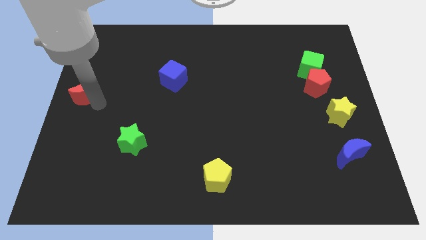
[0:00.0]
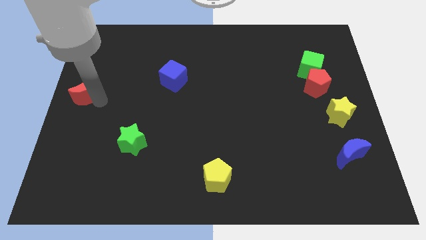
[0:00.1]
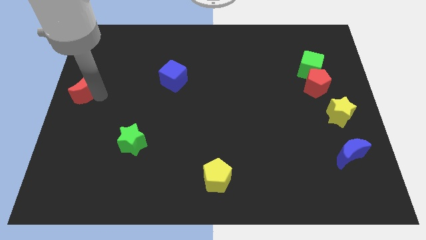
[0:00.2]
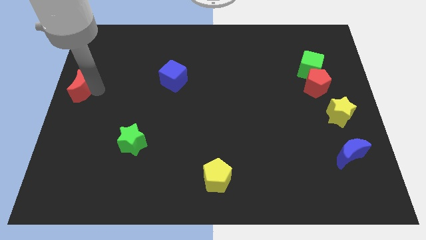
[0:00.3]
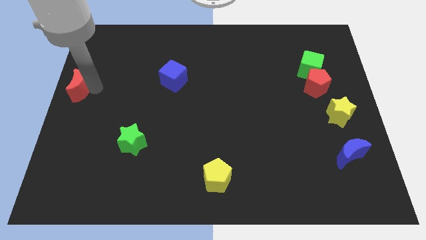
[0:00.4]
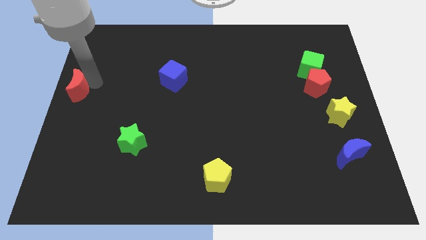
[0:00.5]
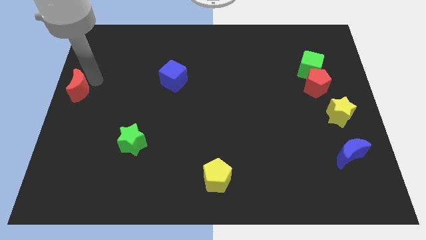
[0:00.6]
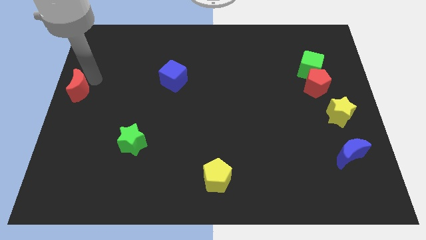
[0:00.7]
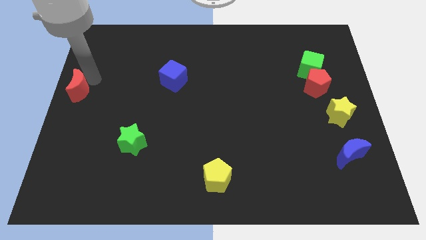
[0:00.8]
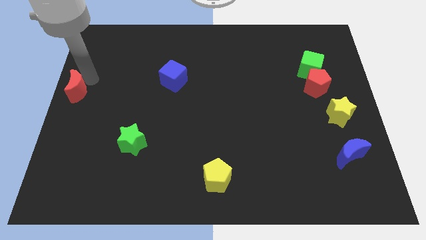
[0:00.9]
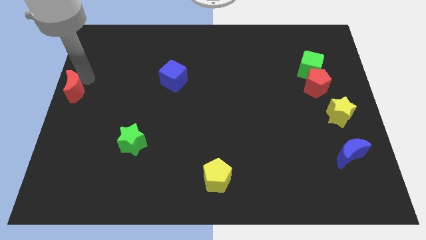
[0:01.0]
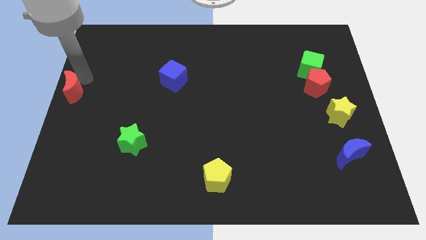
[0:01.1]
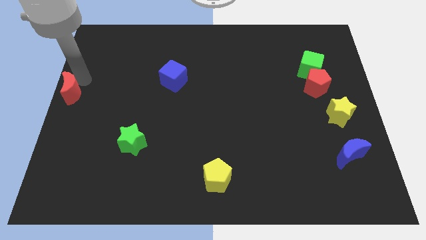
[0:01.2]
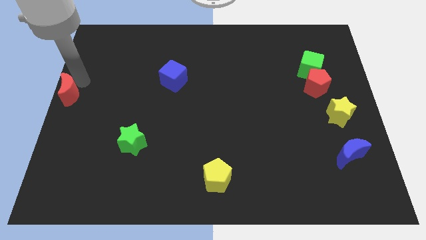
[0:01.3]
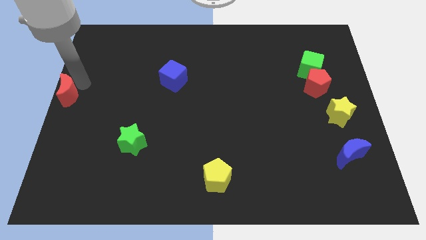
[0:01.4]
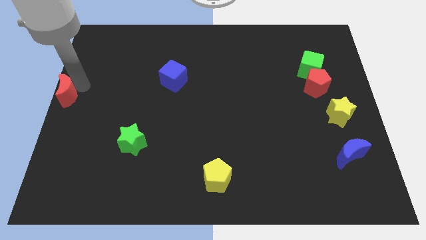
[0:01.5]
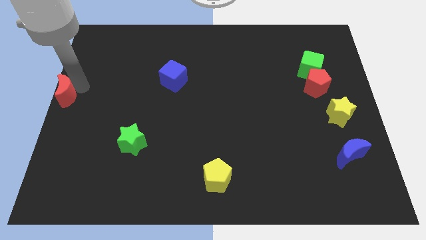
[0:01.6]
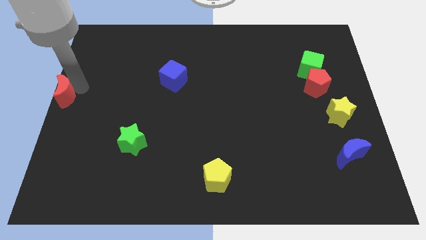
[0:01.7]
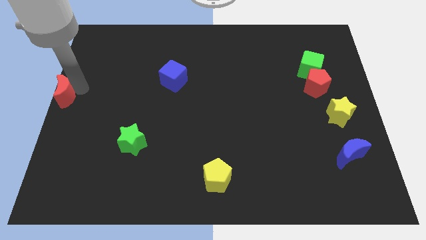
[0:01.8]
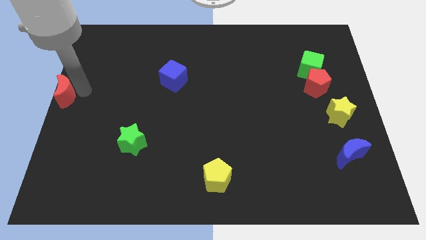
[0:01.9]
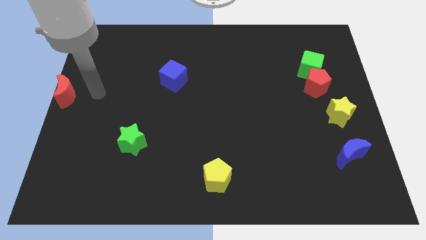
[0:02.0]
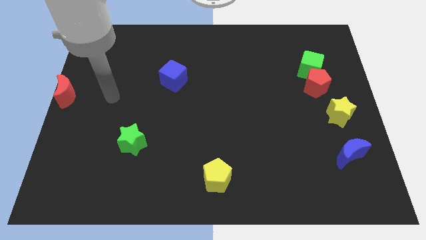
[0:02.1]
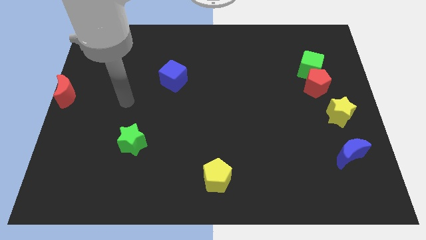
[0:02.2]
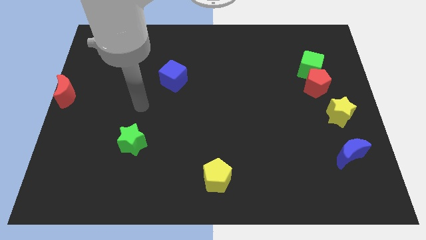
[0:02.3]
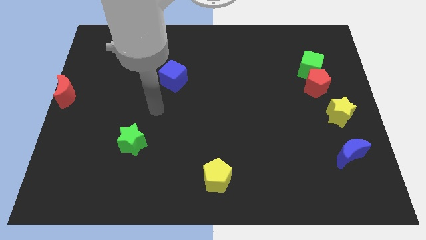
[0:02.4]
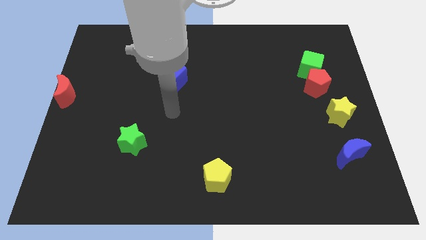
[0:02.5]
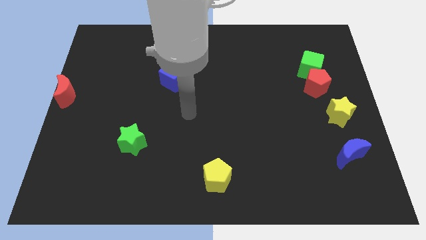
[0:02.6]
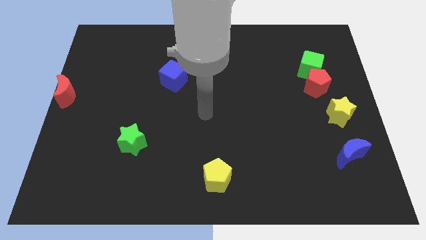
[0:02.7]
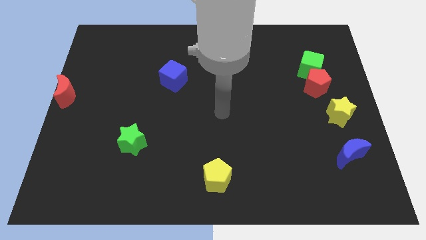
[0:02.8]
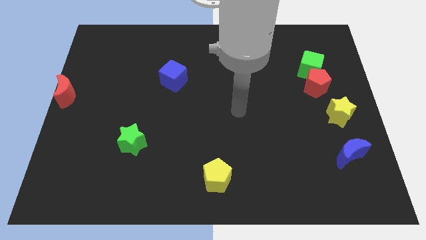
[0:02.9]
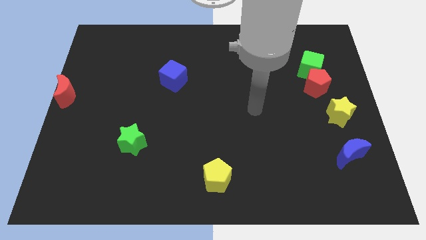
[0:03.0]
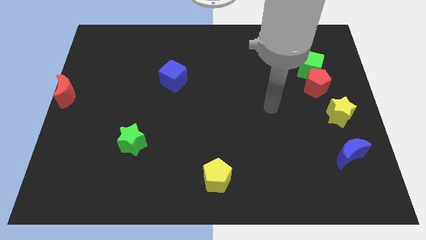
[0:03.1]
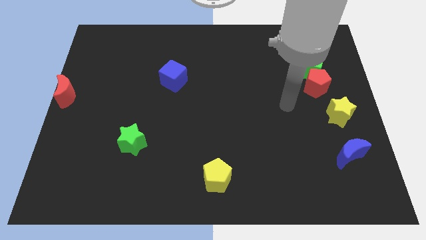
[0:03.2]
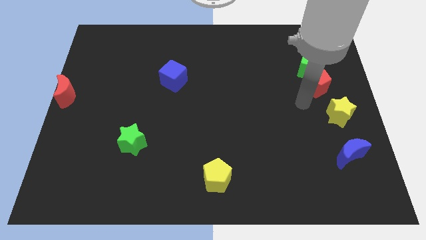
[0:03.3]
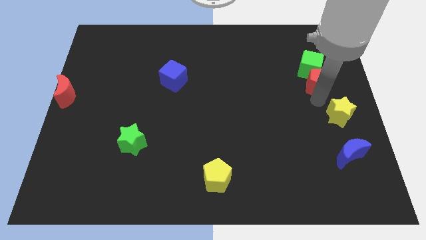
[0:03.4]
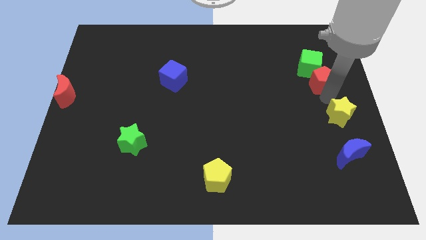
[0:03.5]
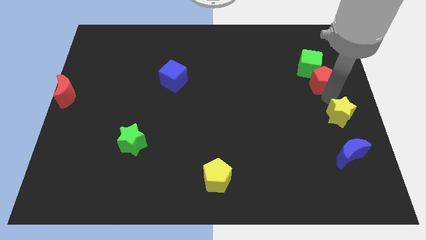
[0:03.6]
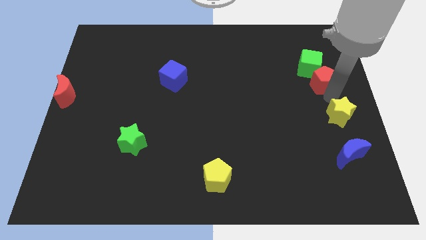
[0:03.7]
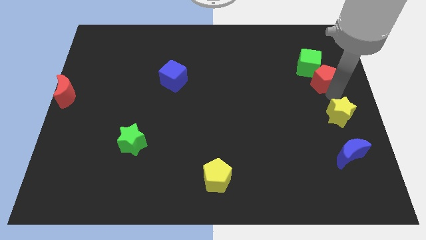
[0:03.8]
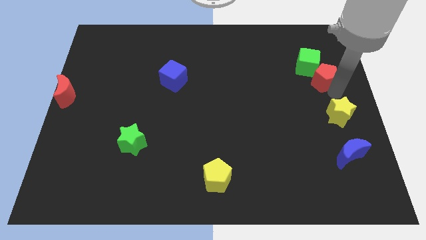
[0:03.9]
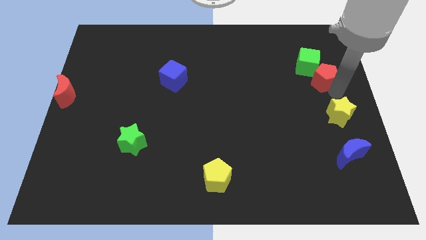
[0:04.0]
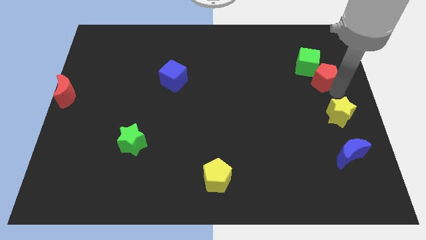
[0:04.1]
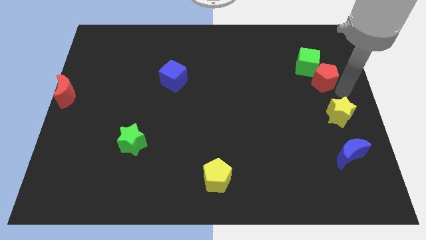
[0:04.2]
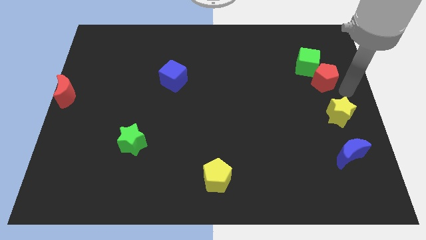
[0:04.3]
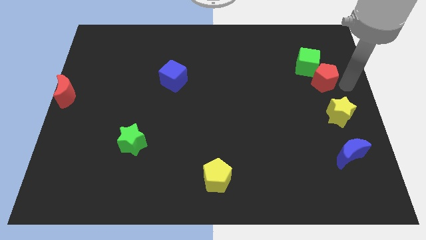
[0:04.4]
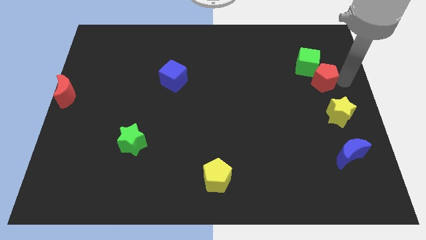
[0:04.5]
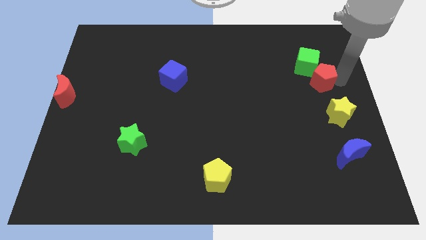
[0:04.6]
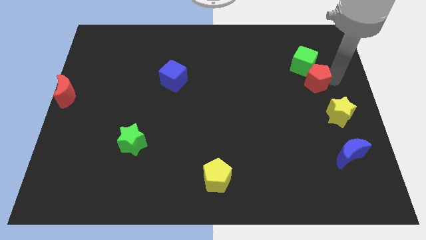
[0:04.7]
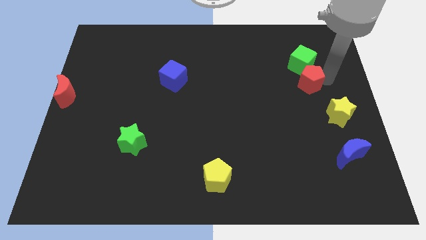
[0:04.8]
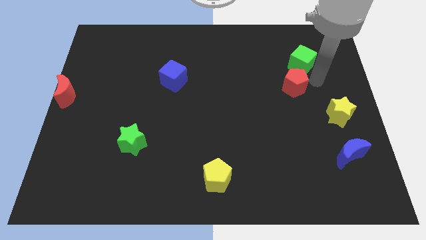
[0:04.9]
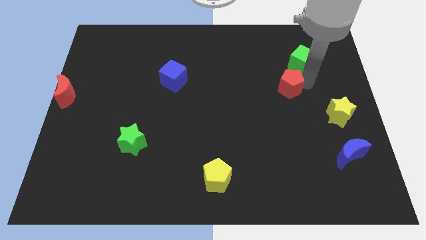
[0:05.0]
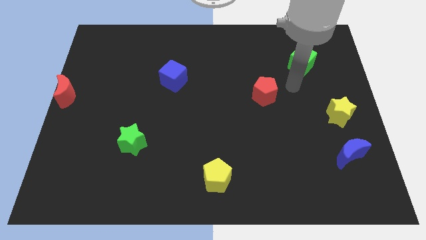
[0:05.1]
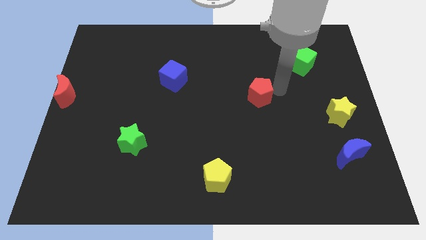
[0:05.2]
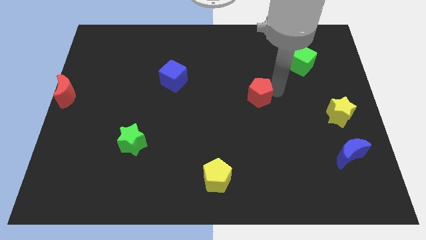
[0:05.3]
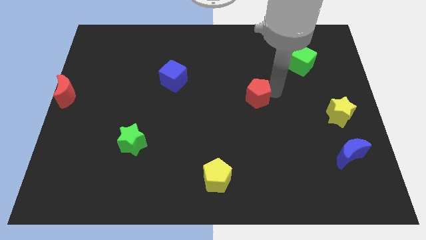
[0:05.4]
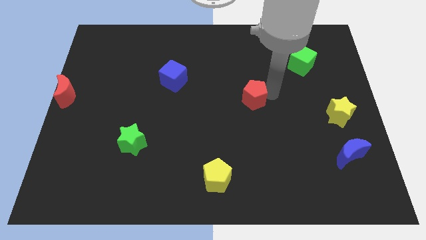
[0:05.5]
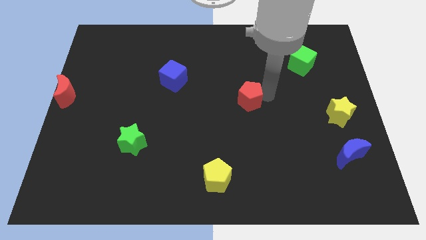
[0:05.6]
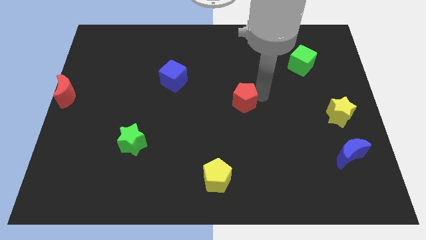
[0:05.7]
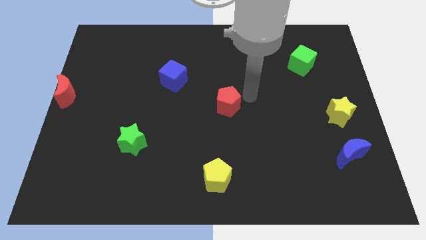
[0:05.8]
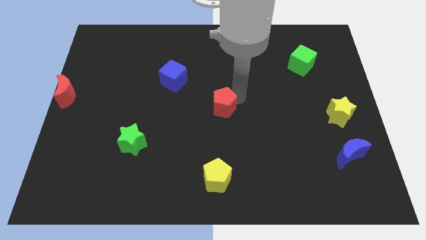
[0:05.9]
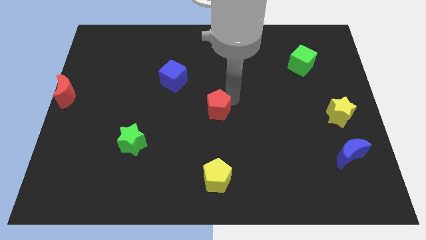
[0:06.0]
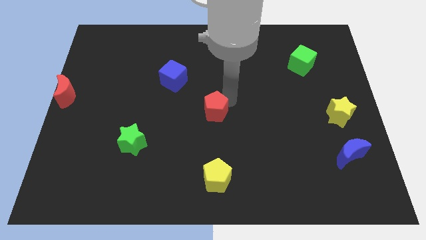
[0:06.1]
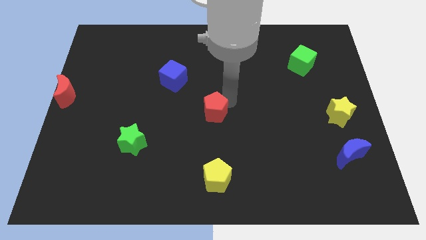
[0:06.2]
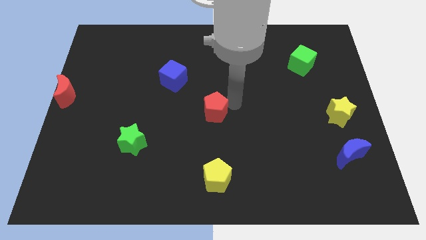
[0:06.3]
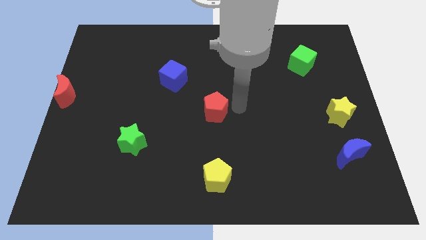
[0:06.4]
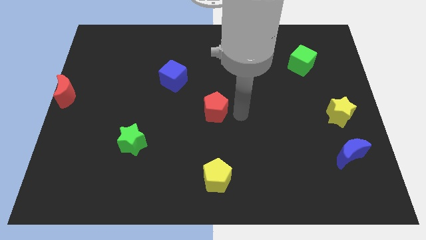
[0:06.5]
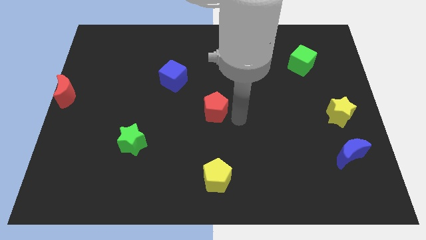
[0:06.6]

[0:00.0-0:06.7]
move red pentagon to the centre of the board

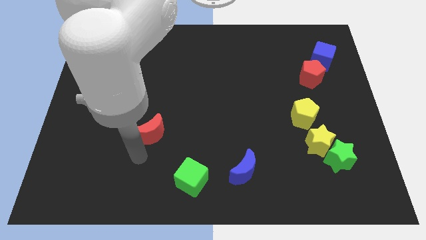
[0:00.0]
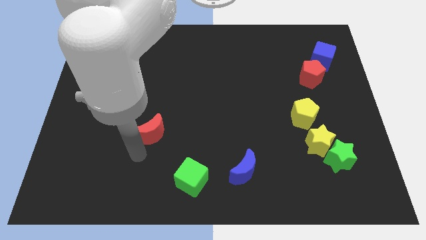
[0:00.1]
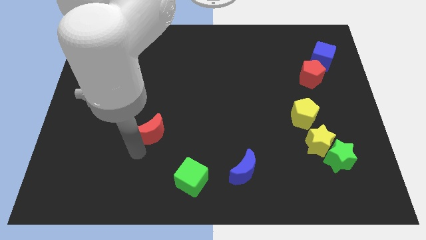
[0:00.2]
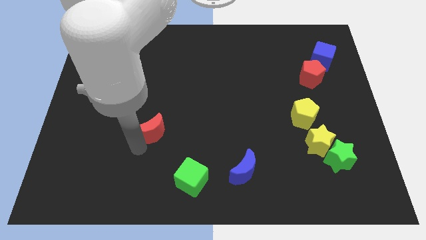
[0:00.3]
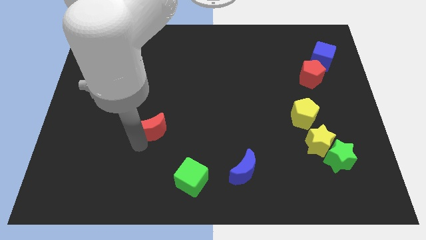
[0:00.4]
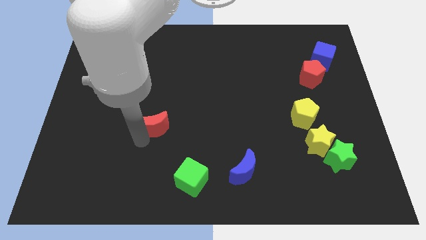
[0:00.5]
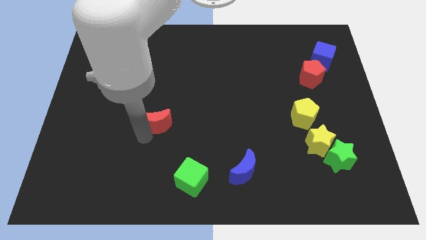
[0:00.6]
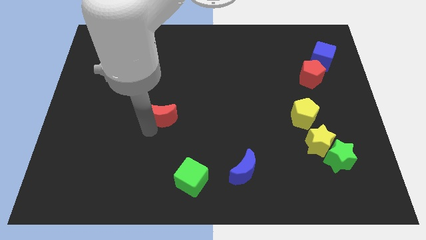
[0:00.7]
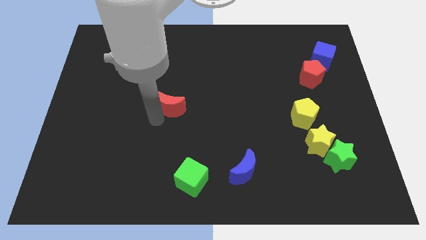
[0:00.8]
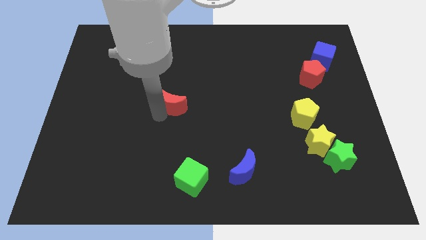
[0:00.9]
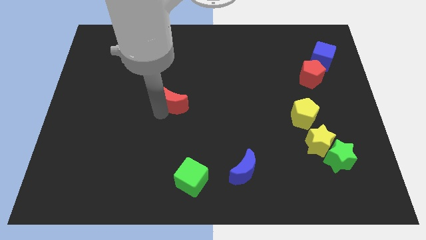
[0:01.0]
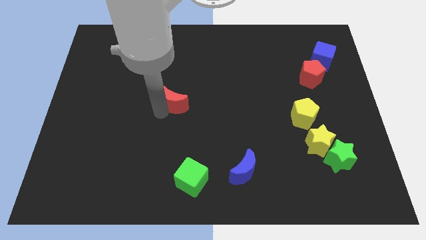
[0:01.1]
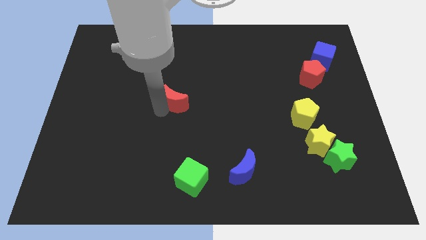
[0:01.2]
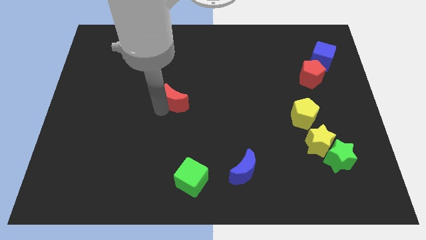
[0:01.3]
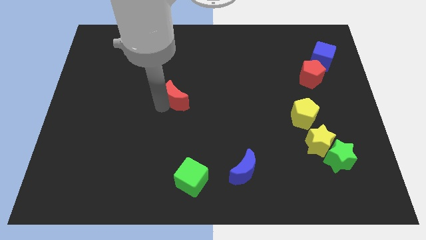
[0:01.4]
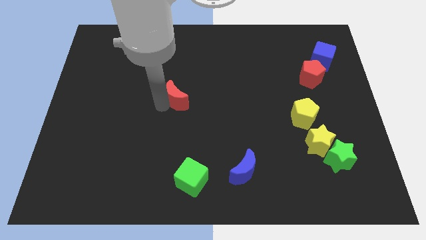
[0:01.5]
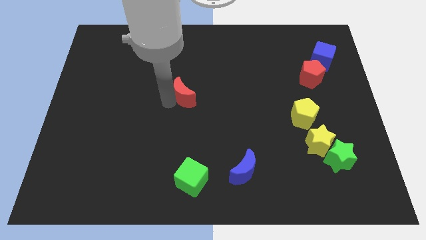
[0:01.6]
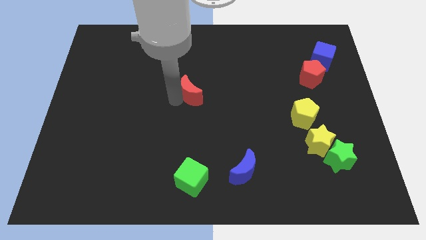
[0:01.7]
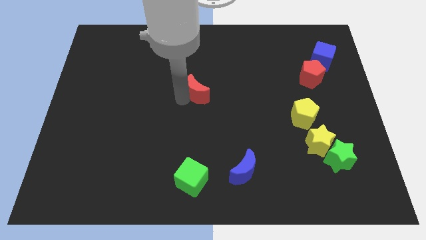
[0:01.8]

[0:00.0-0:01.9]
place the red moon to the middle of the board

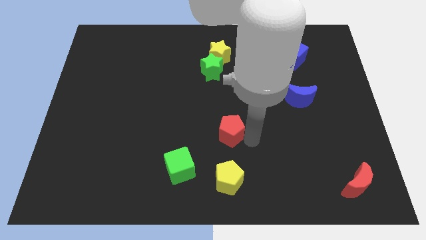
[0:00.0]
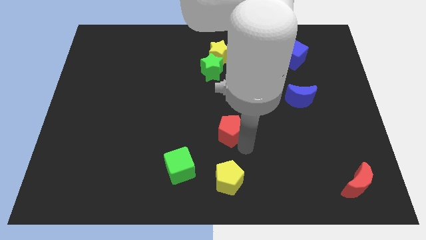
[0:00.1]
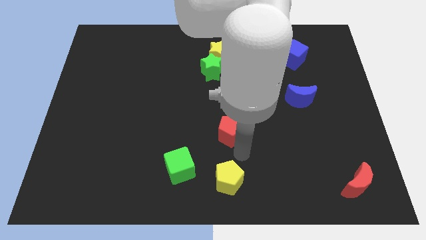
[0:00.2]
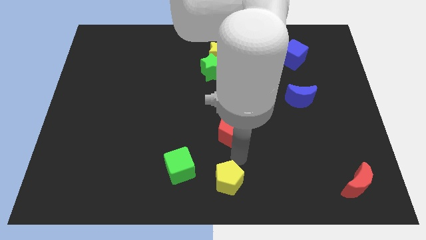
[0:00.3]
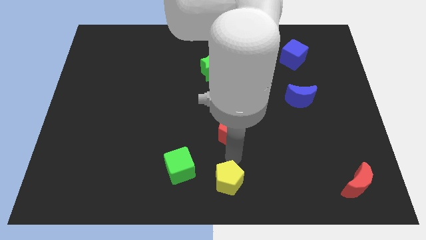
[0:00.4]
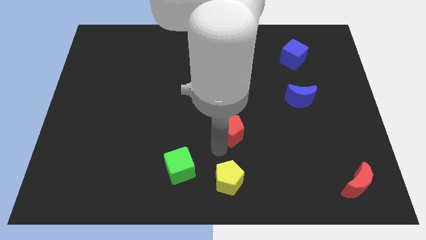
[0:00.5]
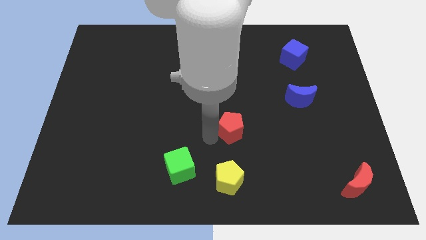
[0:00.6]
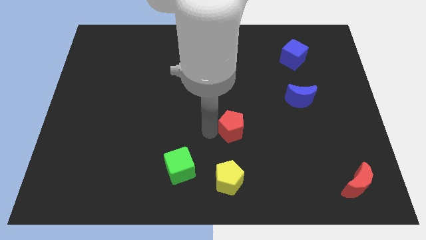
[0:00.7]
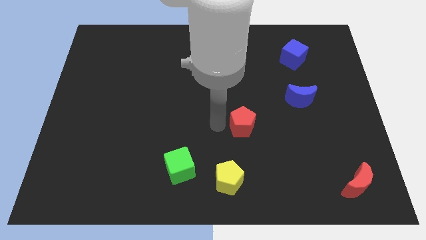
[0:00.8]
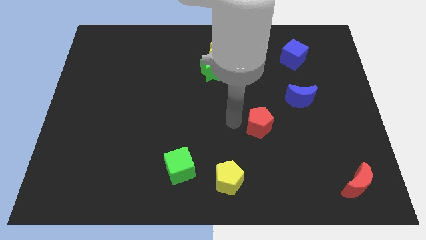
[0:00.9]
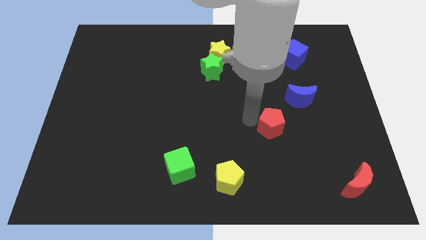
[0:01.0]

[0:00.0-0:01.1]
place the red pentagon between the blue moon and yellow pentagon
